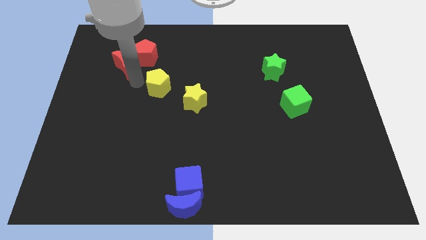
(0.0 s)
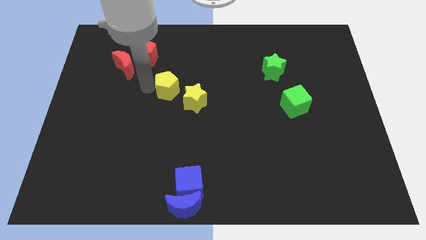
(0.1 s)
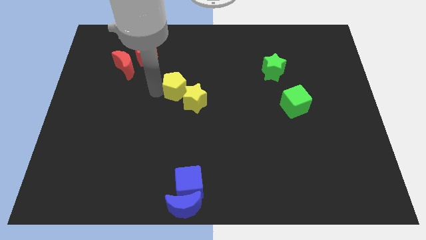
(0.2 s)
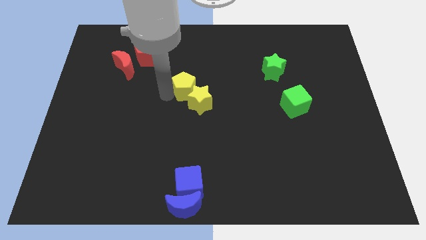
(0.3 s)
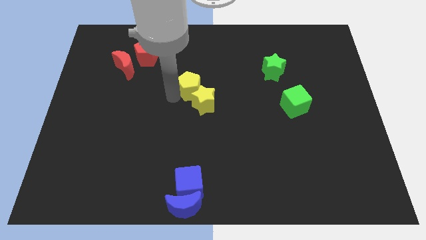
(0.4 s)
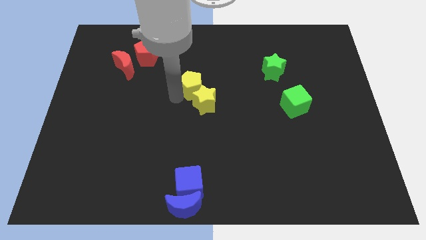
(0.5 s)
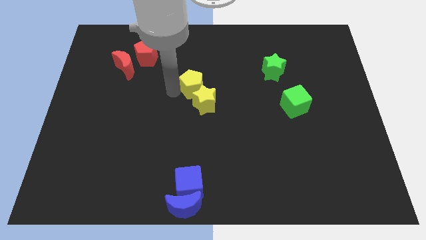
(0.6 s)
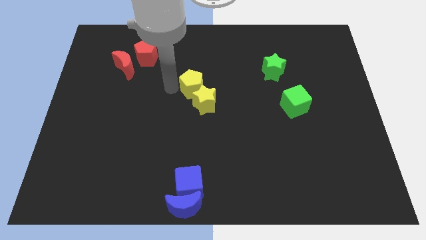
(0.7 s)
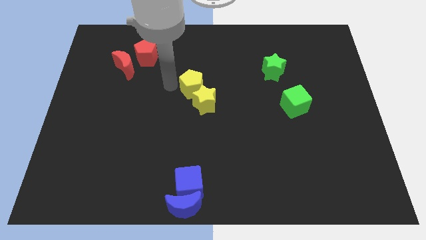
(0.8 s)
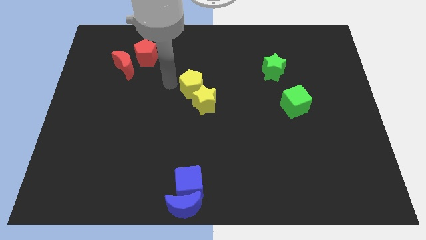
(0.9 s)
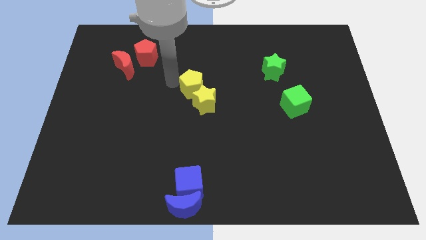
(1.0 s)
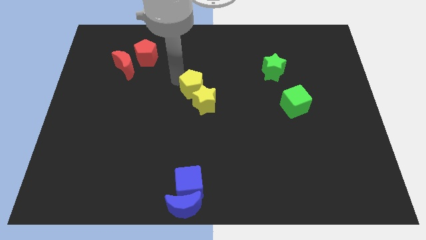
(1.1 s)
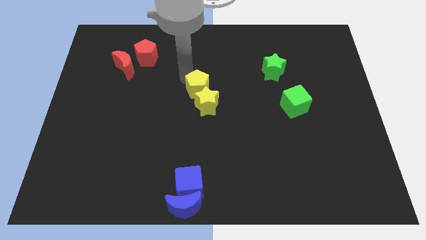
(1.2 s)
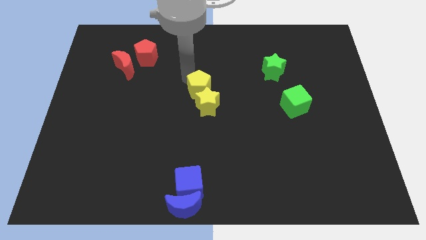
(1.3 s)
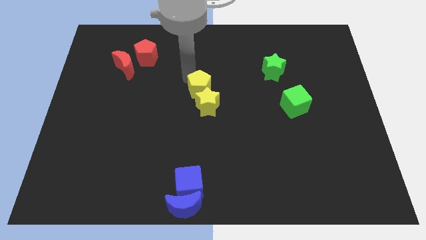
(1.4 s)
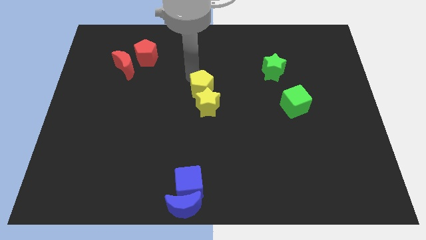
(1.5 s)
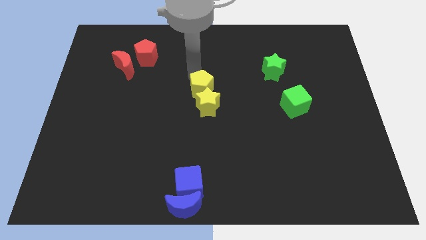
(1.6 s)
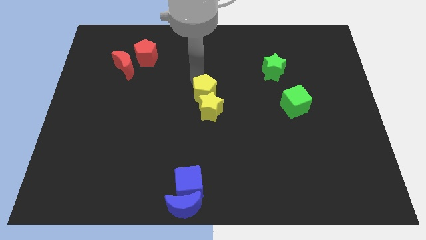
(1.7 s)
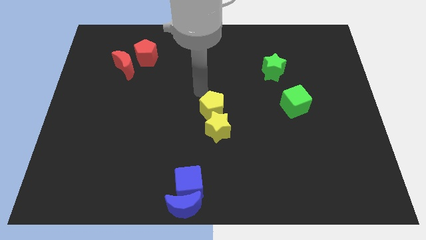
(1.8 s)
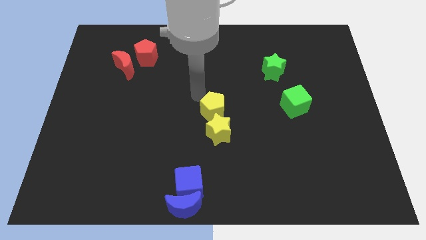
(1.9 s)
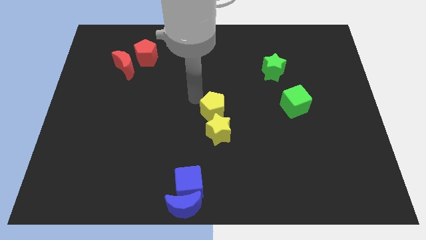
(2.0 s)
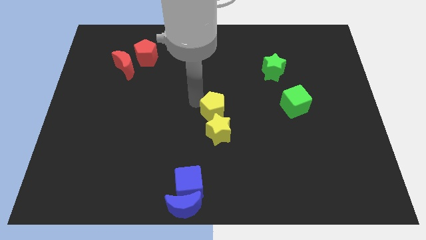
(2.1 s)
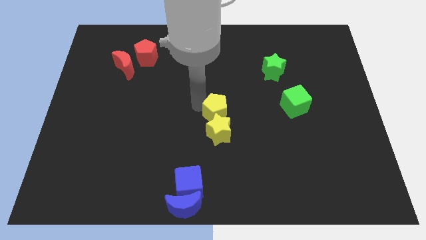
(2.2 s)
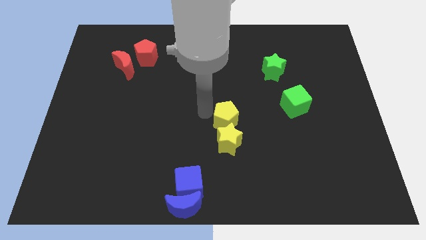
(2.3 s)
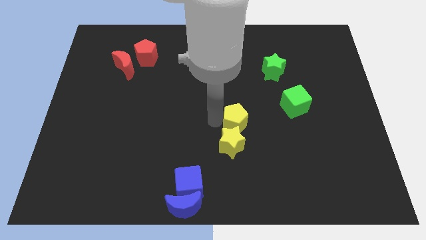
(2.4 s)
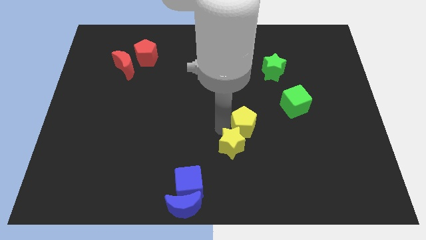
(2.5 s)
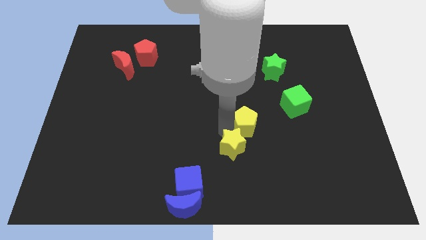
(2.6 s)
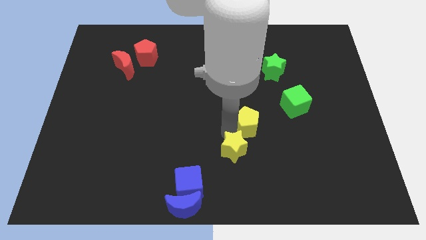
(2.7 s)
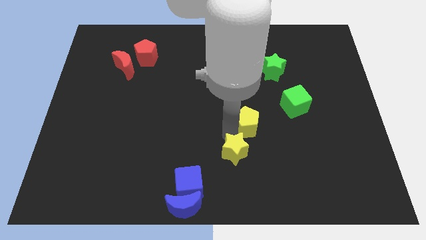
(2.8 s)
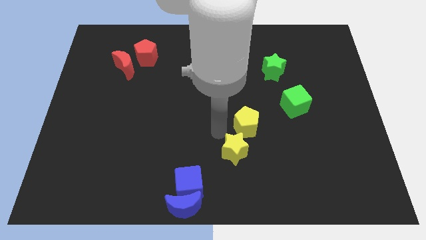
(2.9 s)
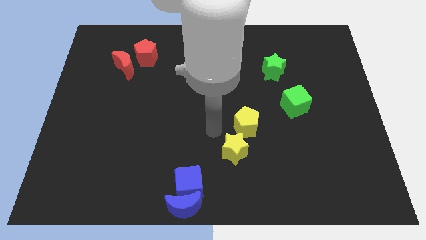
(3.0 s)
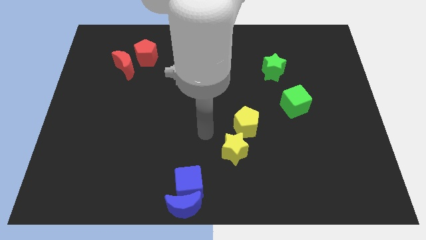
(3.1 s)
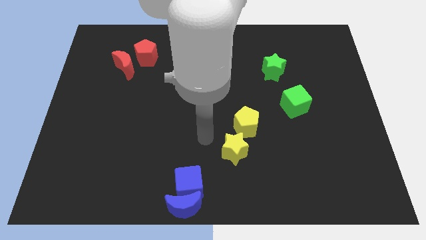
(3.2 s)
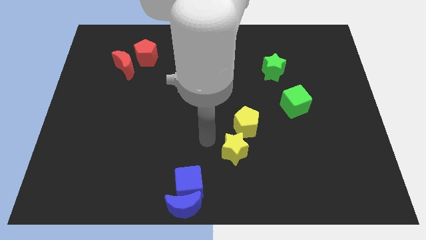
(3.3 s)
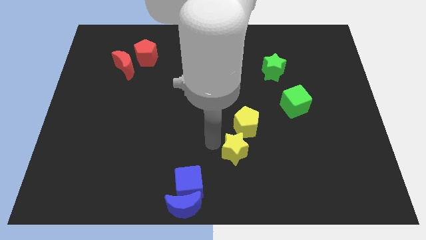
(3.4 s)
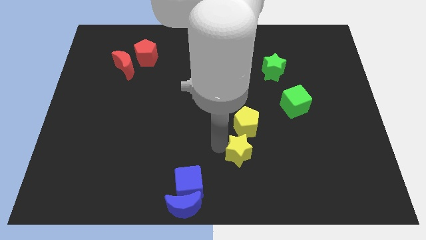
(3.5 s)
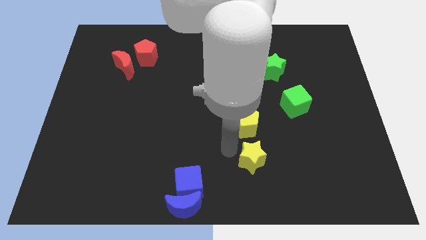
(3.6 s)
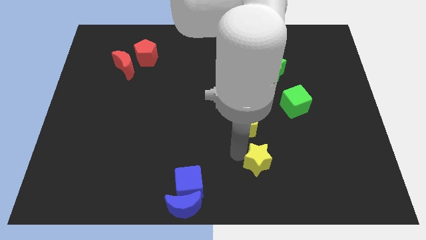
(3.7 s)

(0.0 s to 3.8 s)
move the yellow blocks slightly to the bottom

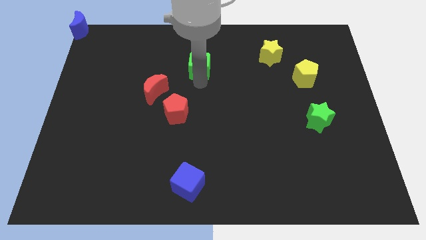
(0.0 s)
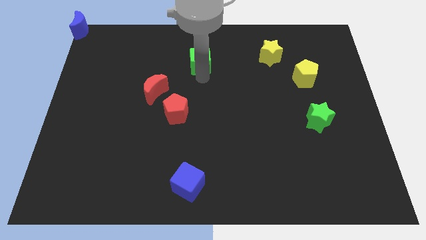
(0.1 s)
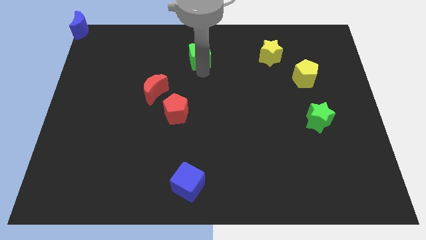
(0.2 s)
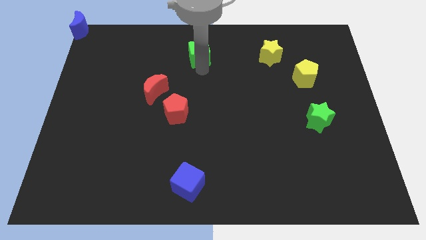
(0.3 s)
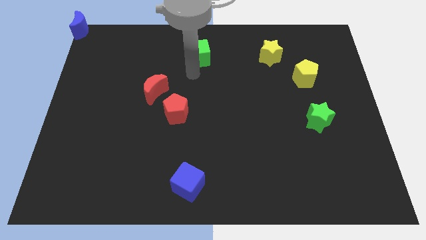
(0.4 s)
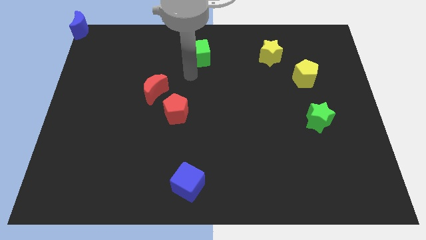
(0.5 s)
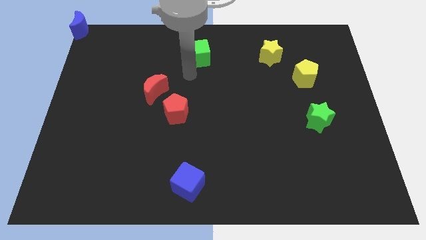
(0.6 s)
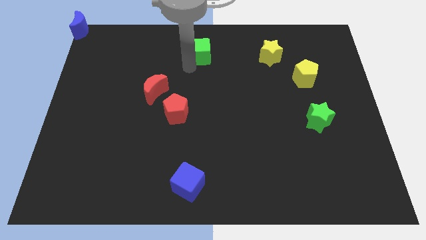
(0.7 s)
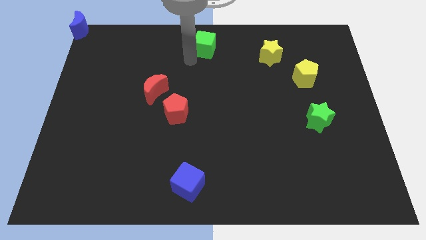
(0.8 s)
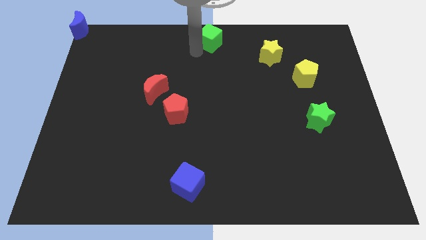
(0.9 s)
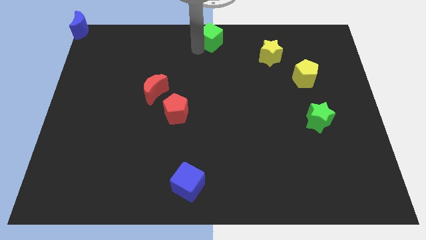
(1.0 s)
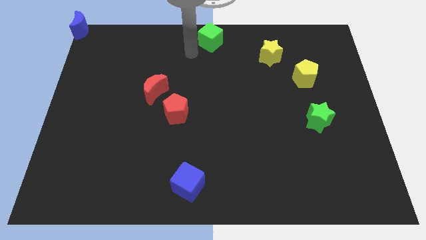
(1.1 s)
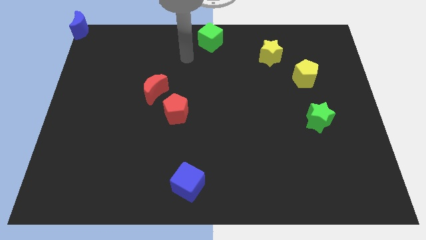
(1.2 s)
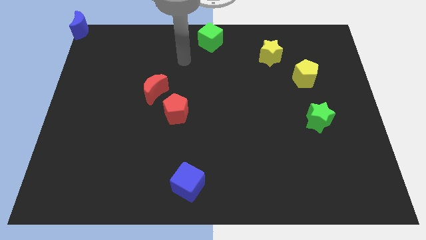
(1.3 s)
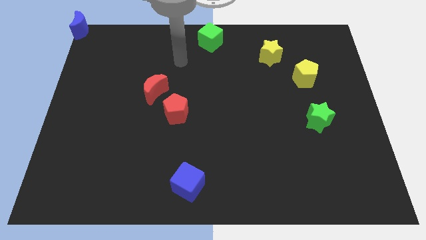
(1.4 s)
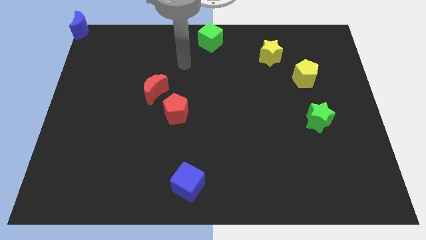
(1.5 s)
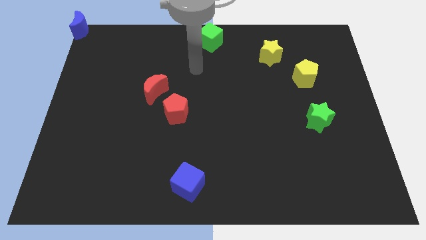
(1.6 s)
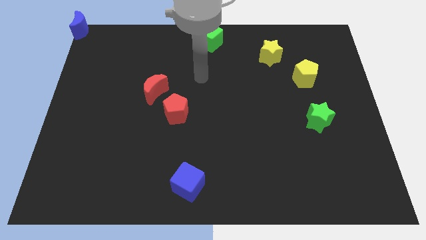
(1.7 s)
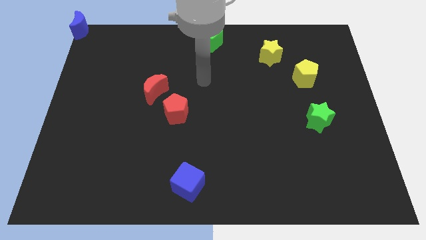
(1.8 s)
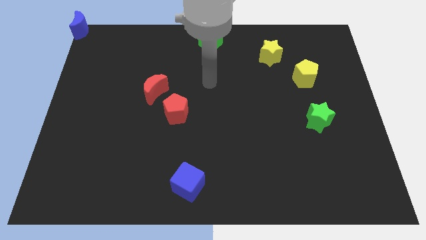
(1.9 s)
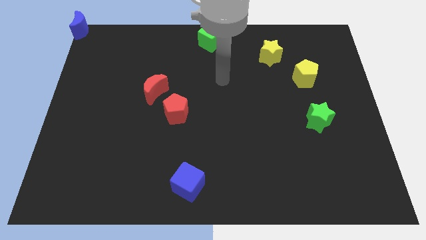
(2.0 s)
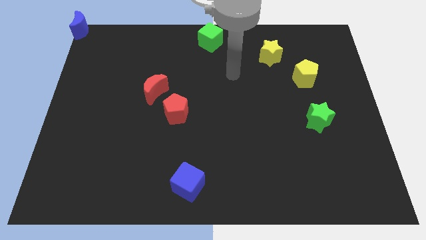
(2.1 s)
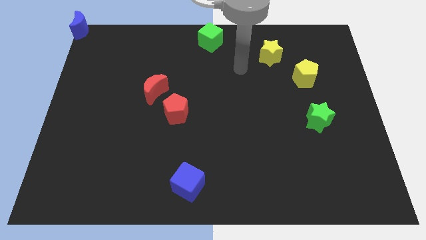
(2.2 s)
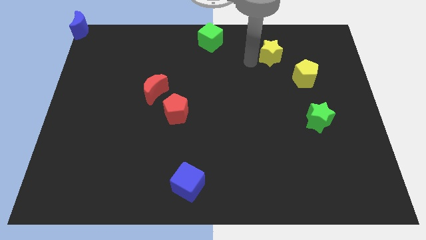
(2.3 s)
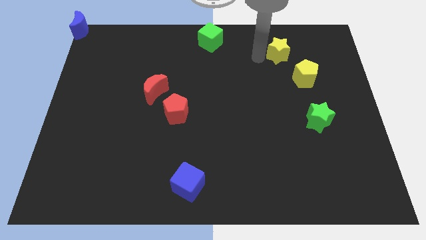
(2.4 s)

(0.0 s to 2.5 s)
push green cube to the top center of the board

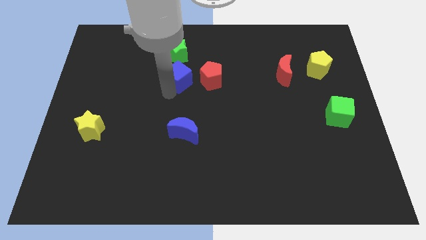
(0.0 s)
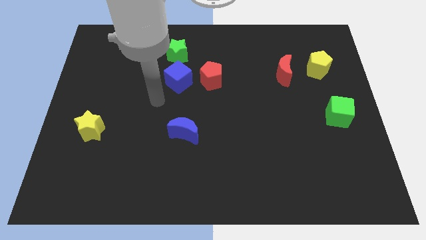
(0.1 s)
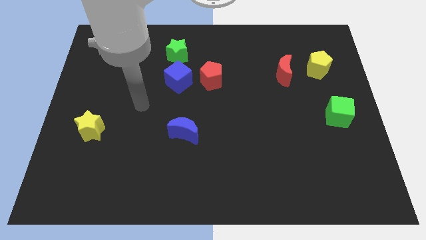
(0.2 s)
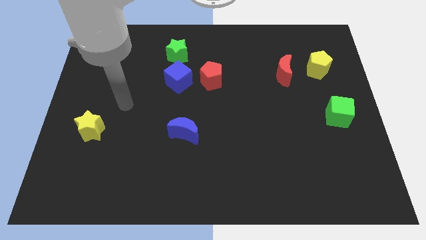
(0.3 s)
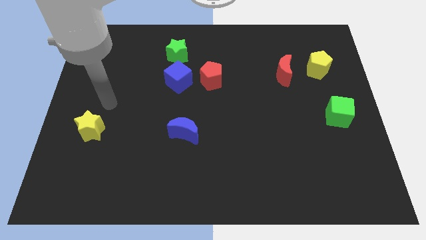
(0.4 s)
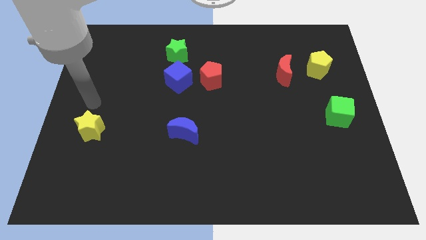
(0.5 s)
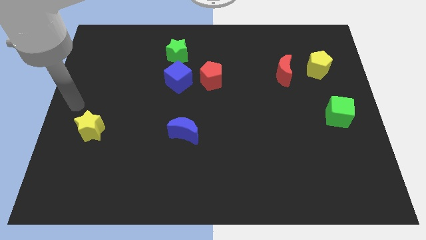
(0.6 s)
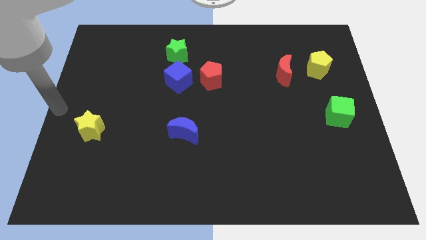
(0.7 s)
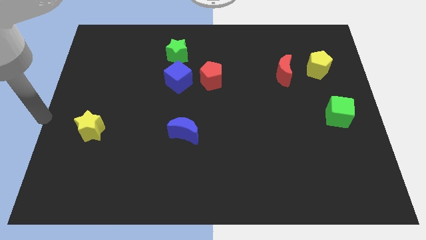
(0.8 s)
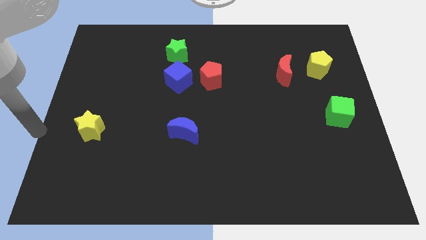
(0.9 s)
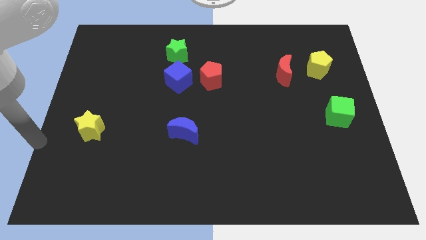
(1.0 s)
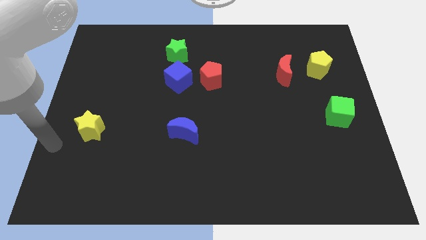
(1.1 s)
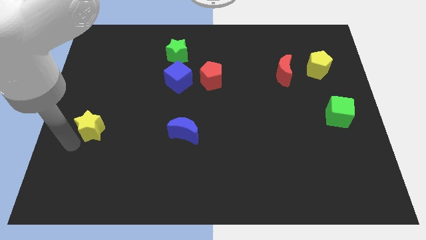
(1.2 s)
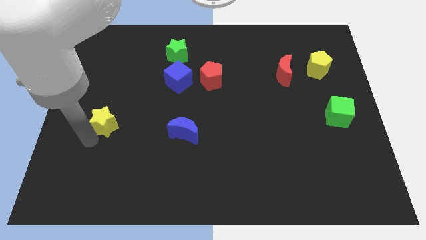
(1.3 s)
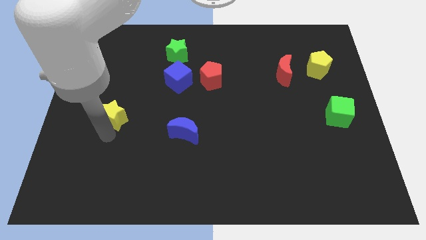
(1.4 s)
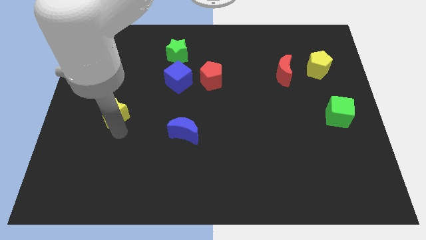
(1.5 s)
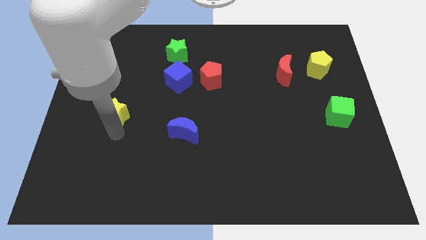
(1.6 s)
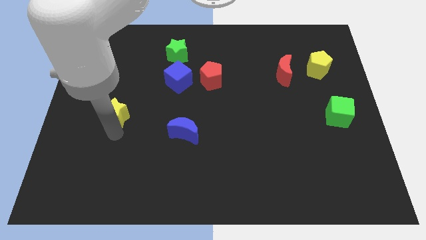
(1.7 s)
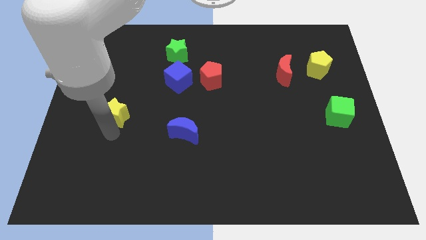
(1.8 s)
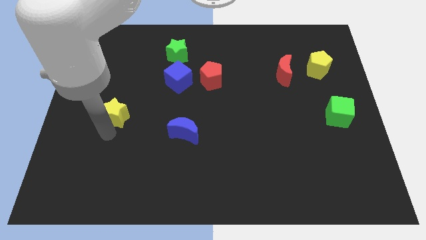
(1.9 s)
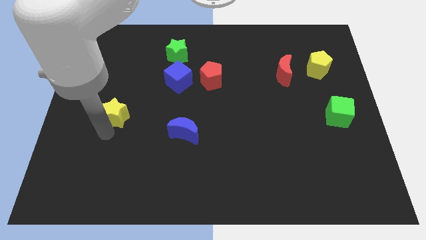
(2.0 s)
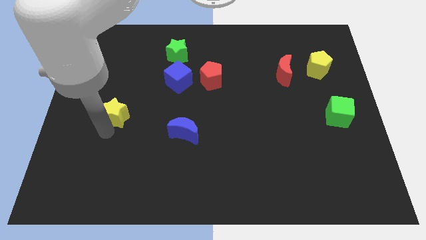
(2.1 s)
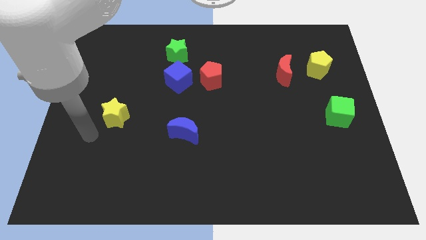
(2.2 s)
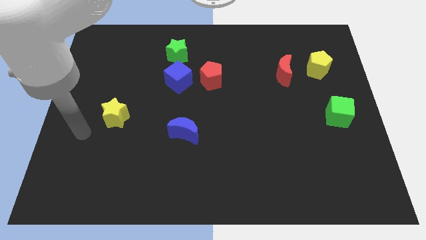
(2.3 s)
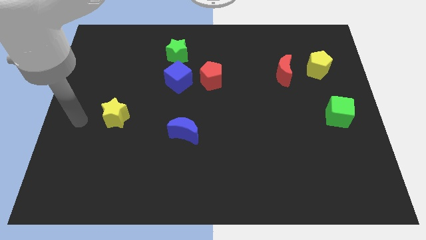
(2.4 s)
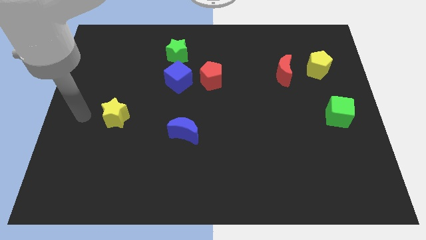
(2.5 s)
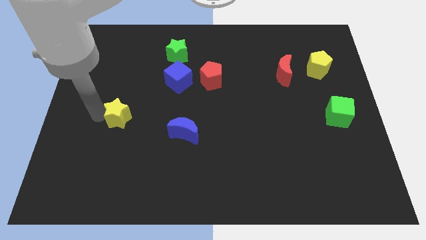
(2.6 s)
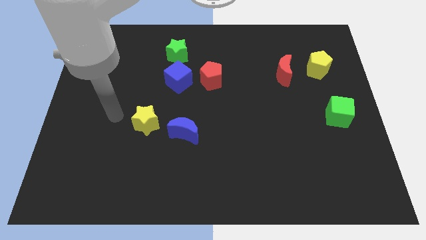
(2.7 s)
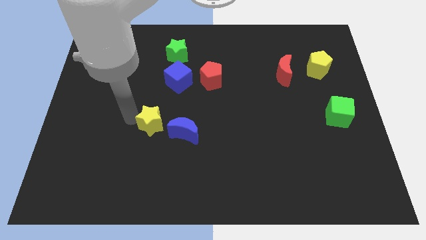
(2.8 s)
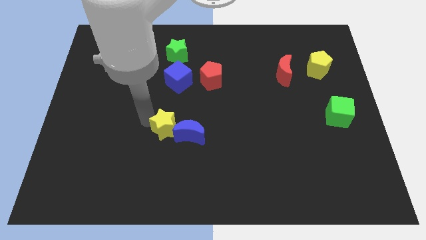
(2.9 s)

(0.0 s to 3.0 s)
push the yellow star to the left of the blue crescent
